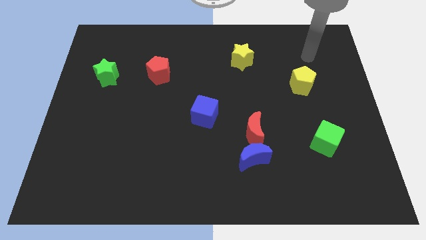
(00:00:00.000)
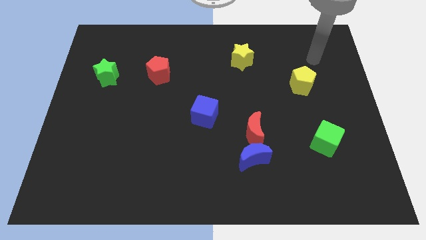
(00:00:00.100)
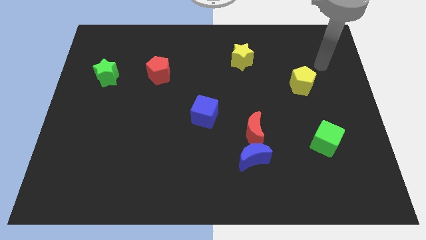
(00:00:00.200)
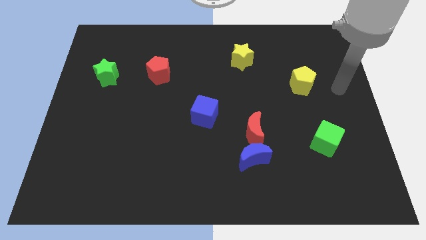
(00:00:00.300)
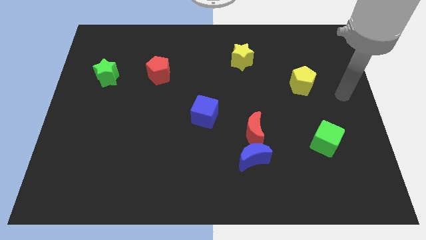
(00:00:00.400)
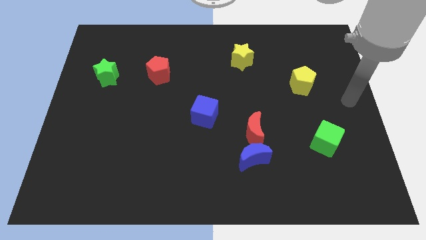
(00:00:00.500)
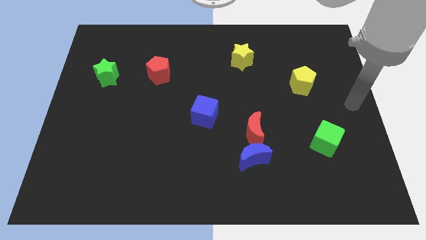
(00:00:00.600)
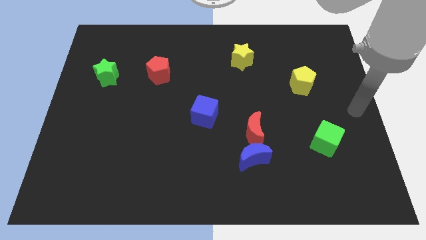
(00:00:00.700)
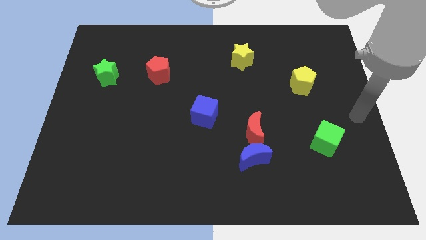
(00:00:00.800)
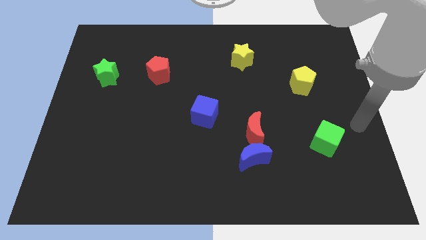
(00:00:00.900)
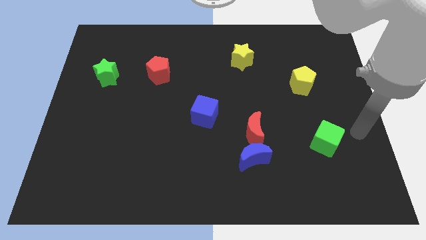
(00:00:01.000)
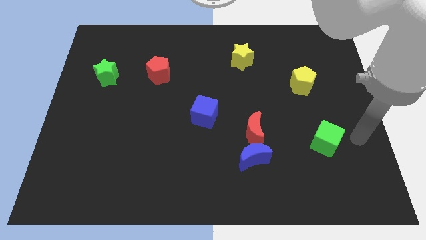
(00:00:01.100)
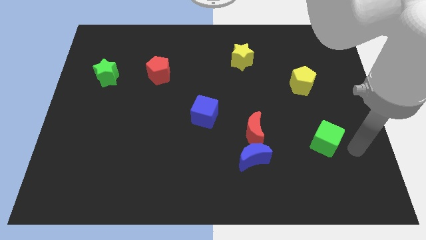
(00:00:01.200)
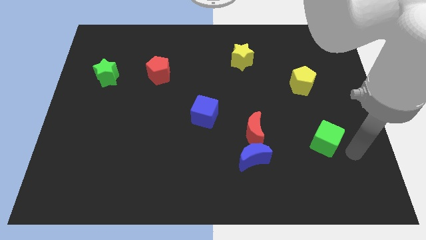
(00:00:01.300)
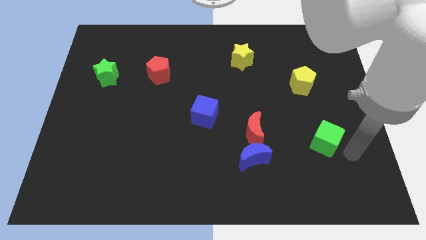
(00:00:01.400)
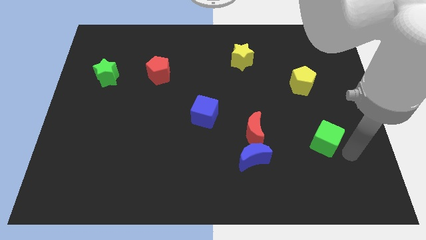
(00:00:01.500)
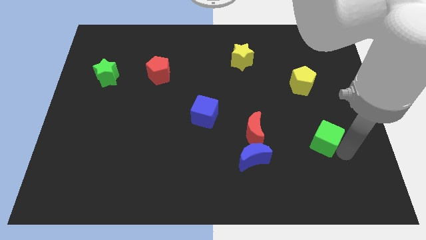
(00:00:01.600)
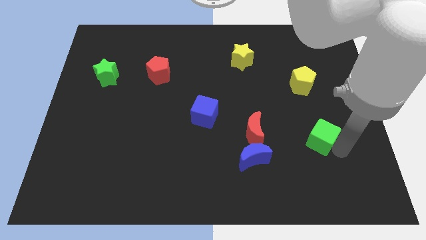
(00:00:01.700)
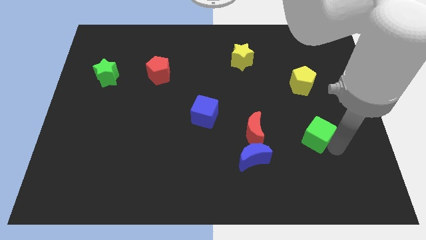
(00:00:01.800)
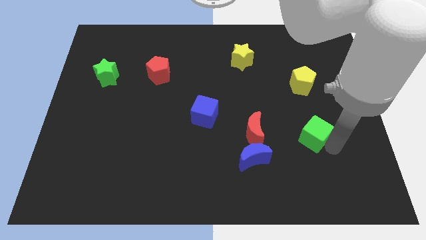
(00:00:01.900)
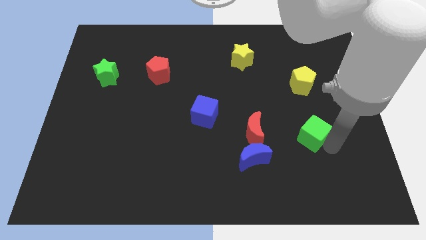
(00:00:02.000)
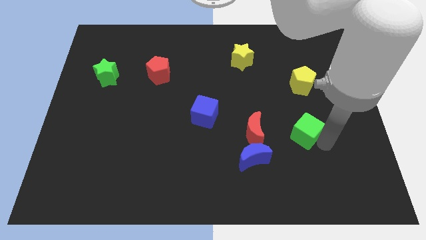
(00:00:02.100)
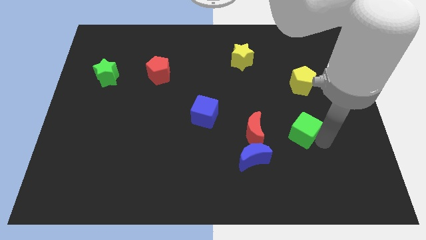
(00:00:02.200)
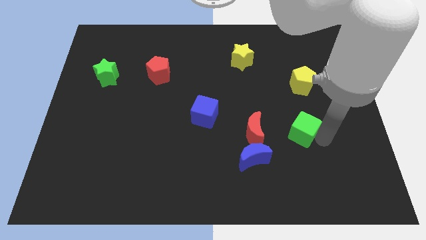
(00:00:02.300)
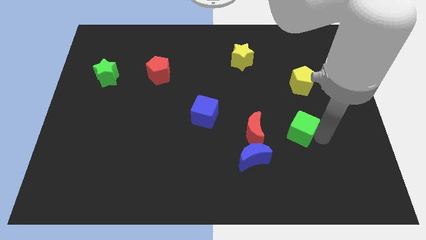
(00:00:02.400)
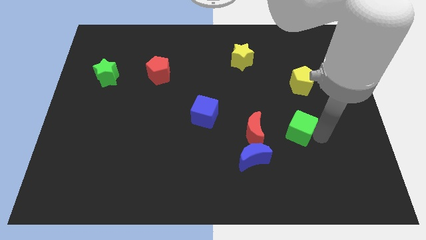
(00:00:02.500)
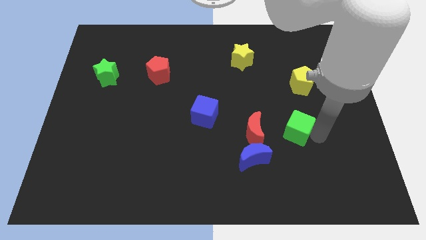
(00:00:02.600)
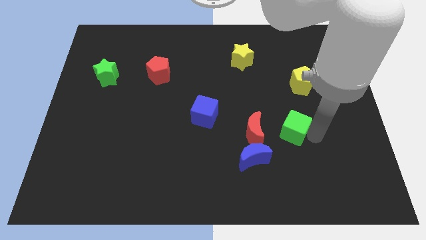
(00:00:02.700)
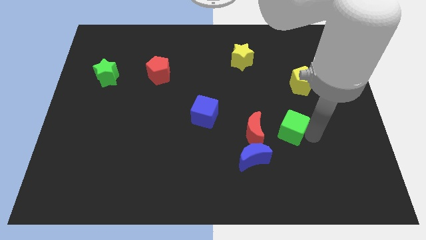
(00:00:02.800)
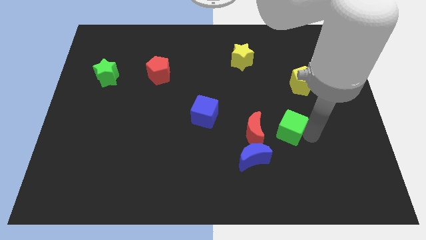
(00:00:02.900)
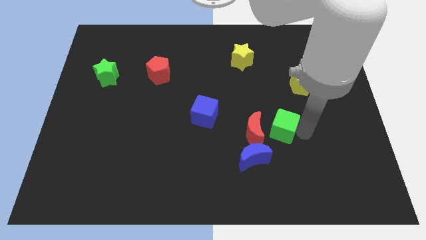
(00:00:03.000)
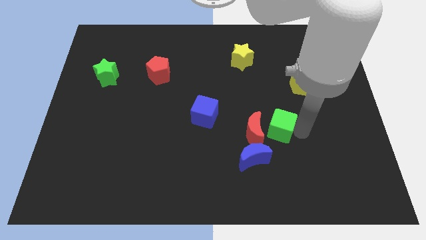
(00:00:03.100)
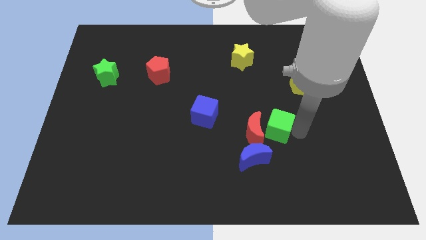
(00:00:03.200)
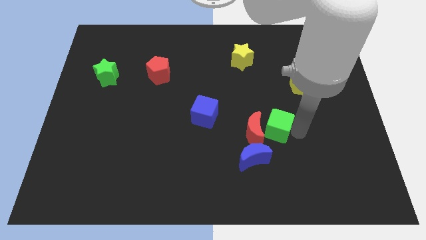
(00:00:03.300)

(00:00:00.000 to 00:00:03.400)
move the green cube close to the red moon

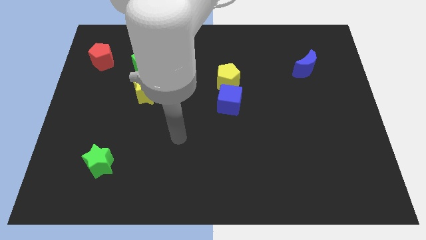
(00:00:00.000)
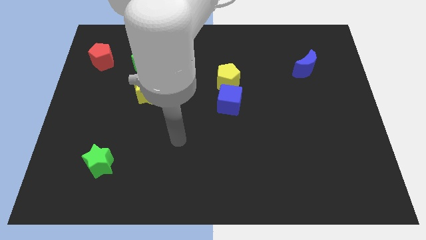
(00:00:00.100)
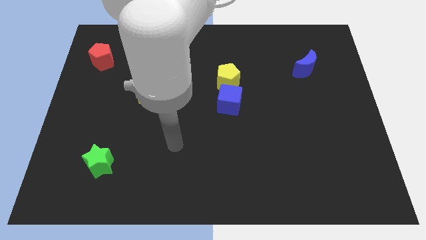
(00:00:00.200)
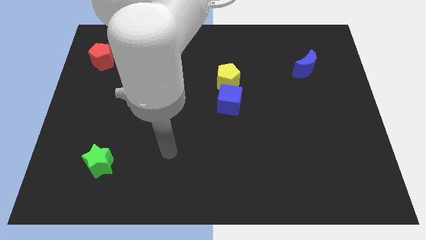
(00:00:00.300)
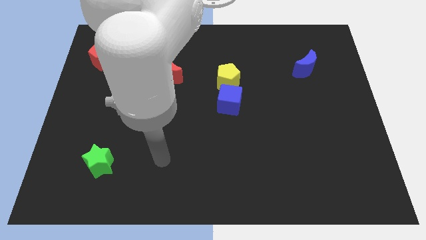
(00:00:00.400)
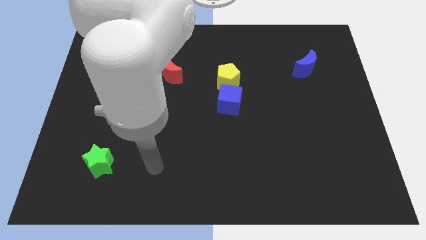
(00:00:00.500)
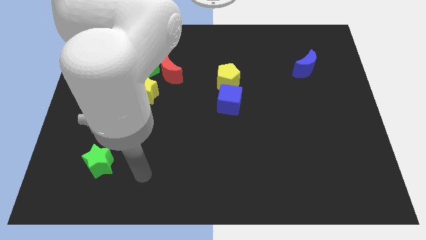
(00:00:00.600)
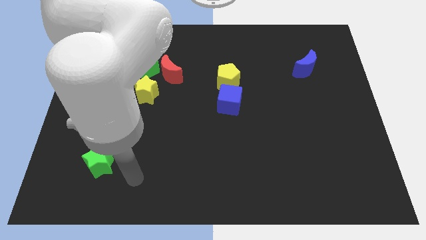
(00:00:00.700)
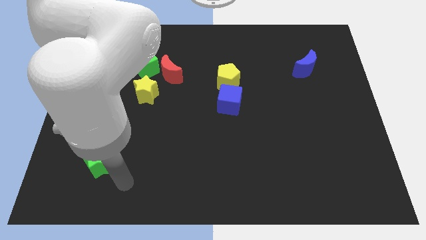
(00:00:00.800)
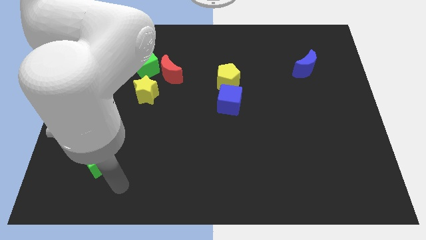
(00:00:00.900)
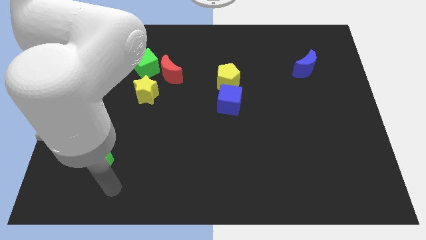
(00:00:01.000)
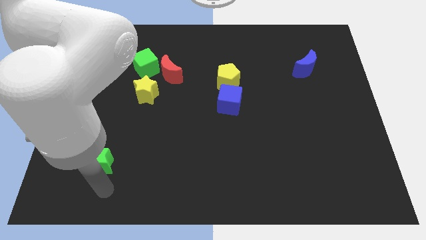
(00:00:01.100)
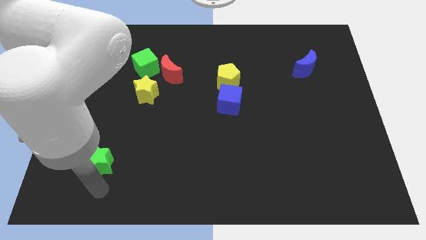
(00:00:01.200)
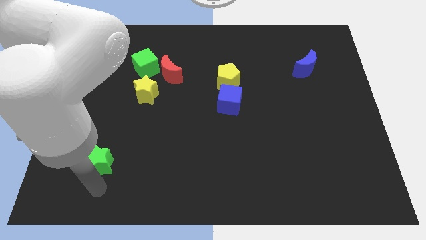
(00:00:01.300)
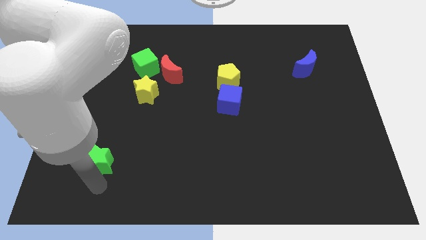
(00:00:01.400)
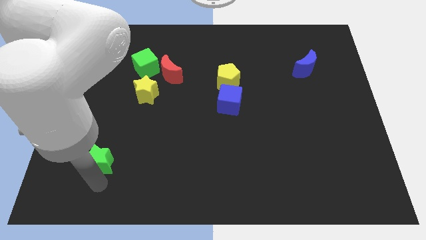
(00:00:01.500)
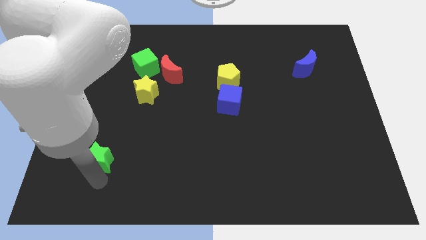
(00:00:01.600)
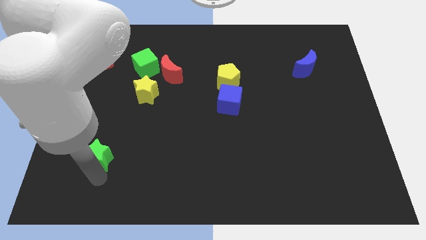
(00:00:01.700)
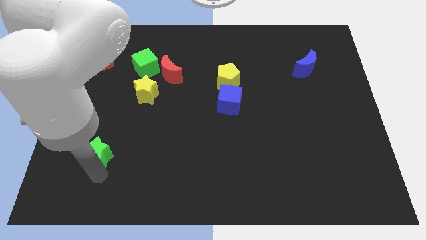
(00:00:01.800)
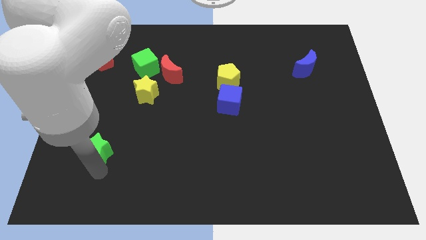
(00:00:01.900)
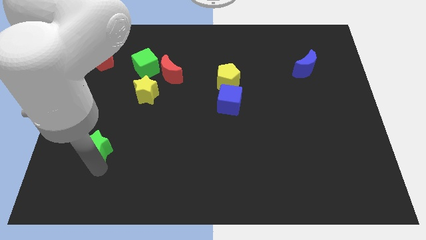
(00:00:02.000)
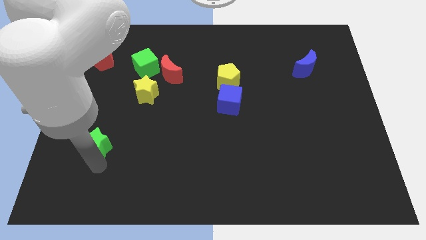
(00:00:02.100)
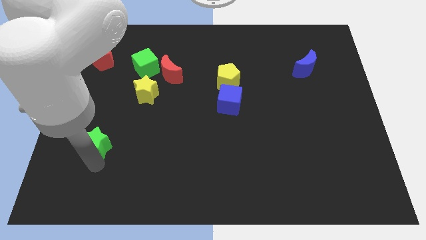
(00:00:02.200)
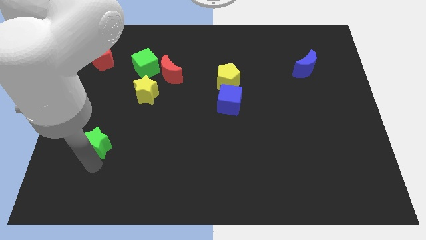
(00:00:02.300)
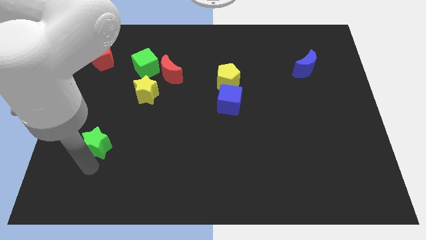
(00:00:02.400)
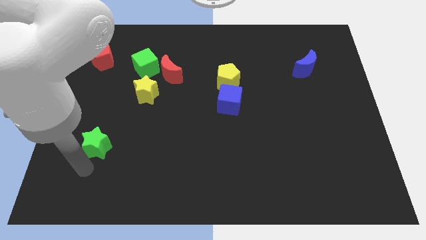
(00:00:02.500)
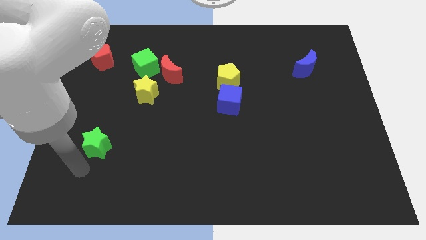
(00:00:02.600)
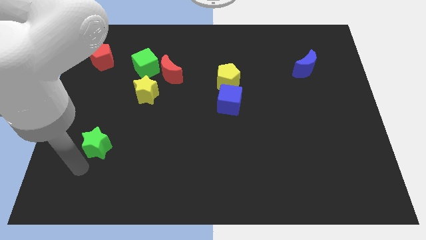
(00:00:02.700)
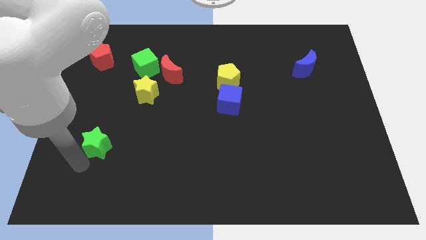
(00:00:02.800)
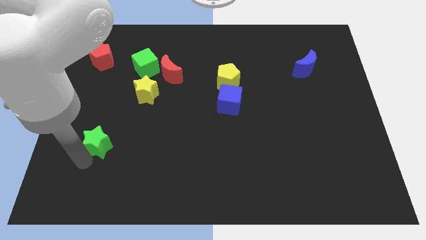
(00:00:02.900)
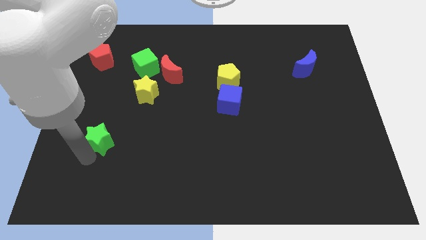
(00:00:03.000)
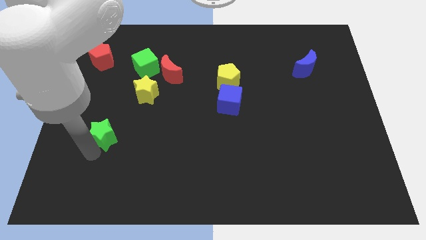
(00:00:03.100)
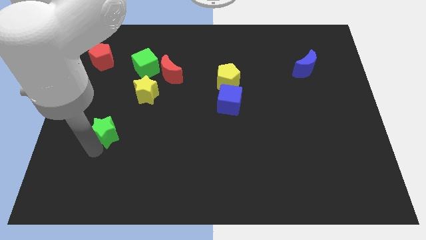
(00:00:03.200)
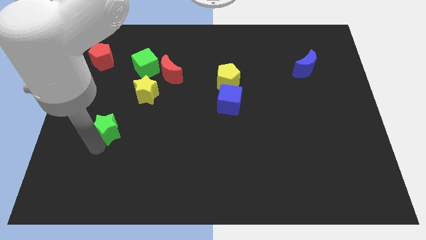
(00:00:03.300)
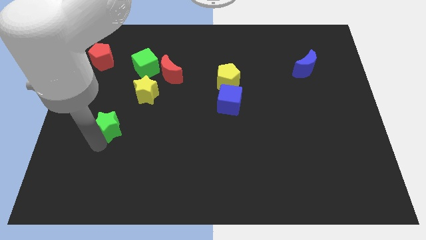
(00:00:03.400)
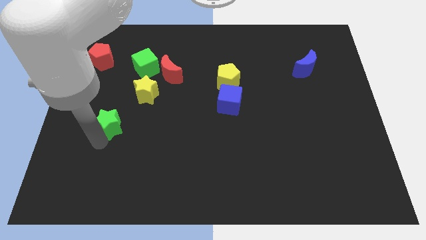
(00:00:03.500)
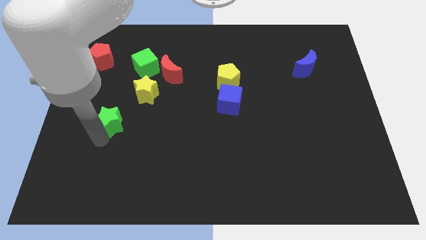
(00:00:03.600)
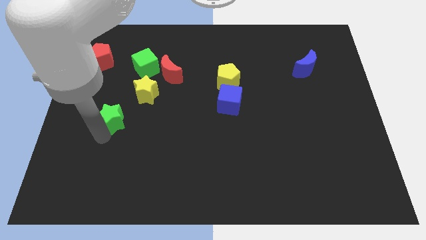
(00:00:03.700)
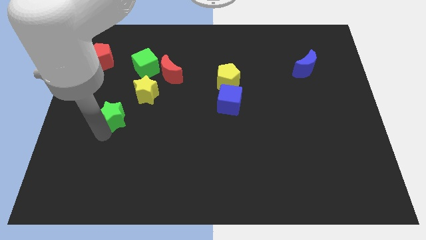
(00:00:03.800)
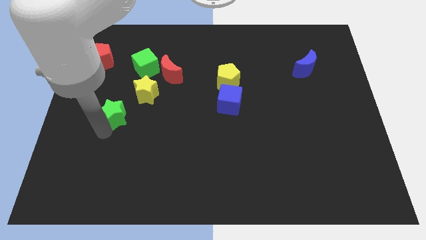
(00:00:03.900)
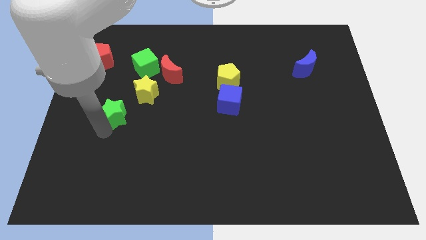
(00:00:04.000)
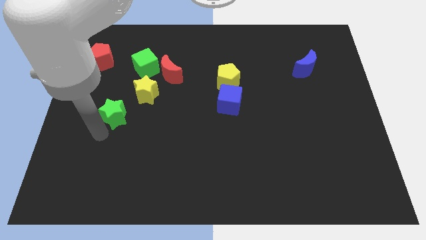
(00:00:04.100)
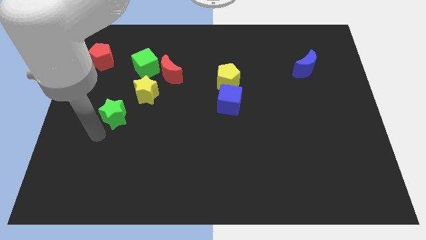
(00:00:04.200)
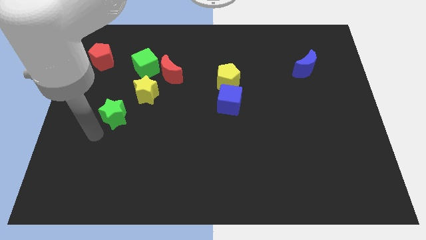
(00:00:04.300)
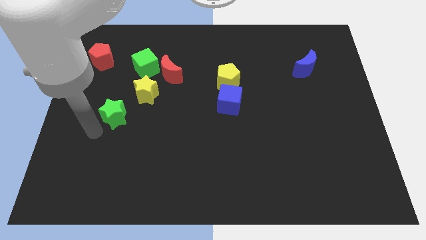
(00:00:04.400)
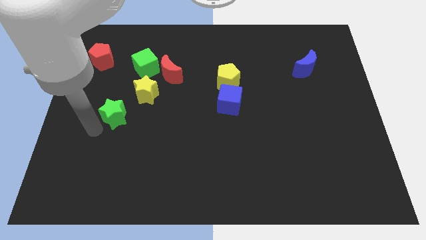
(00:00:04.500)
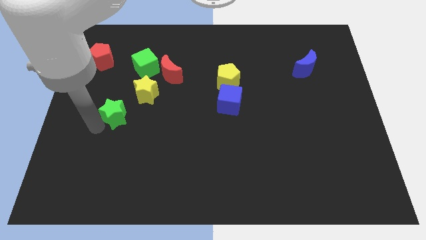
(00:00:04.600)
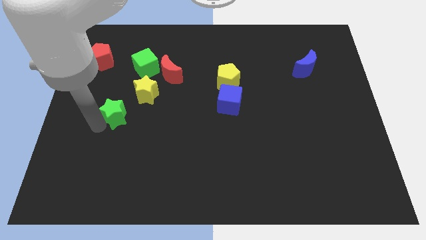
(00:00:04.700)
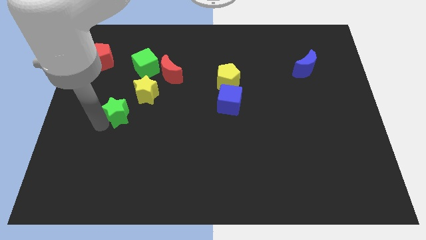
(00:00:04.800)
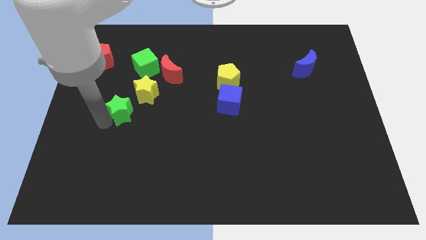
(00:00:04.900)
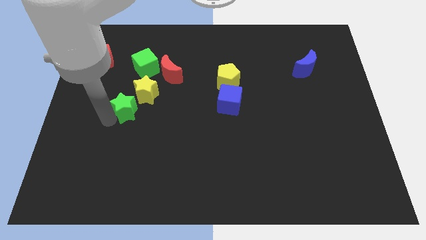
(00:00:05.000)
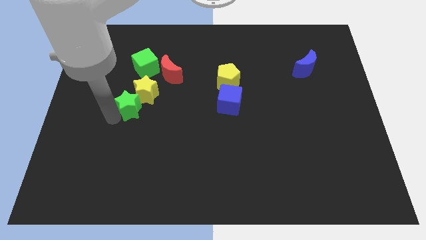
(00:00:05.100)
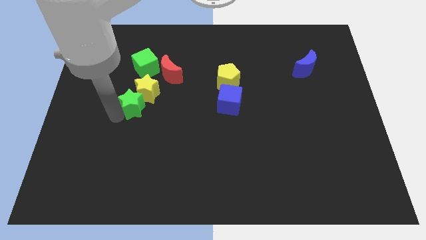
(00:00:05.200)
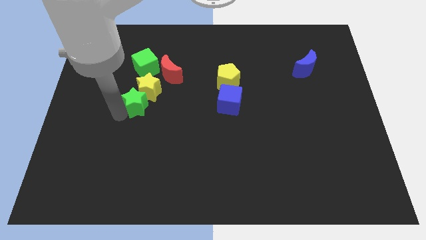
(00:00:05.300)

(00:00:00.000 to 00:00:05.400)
push the green star to the yellow star
